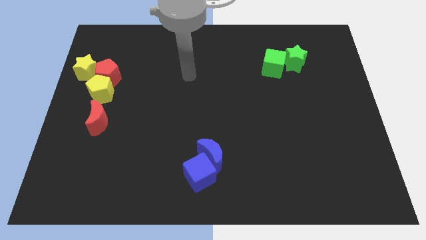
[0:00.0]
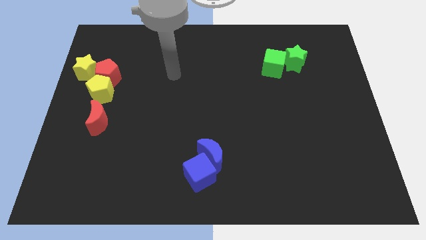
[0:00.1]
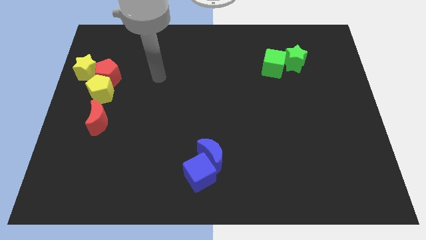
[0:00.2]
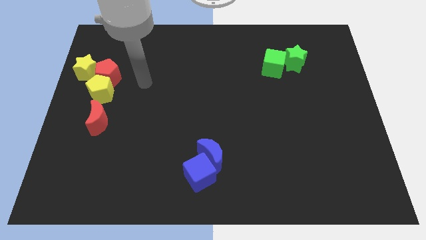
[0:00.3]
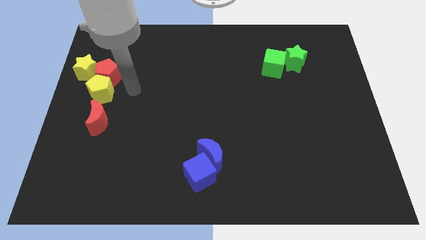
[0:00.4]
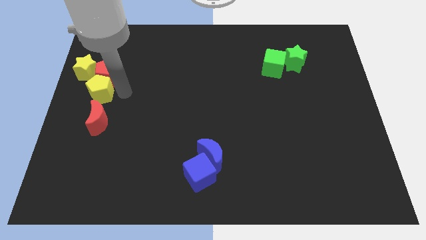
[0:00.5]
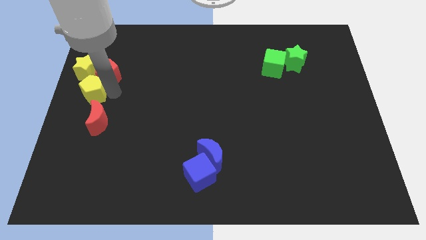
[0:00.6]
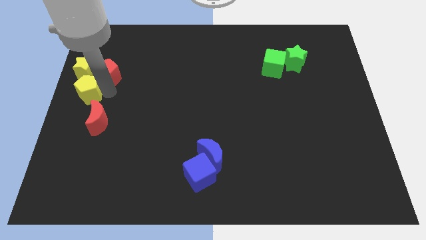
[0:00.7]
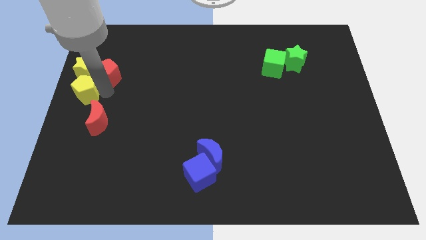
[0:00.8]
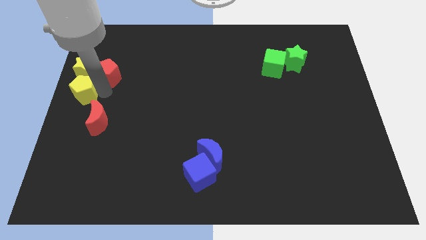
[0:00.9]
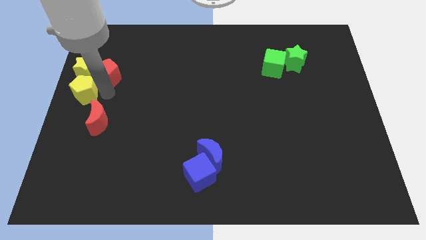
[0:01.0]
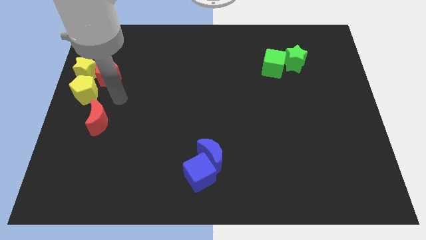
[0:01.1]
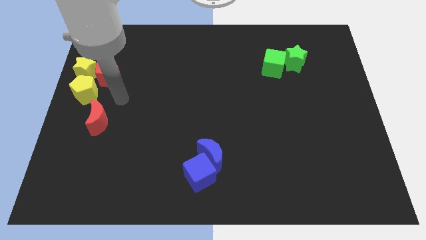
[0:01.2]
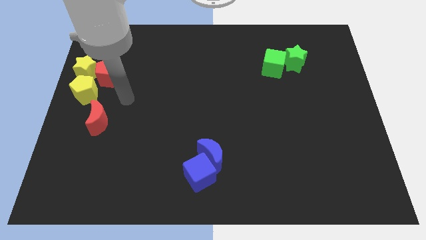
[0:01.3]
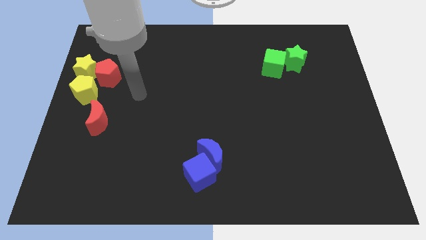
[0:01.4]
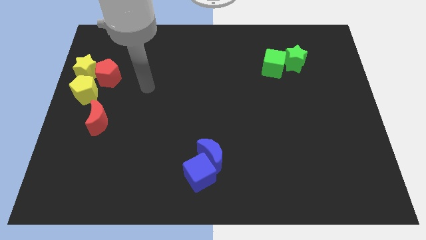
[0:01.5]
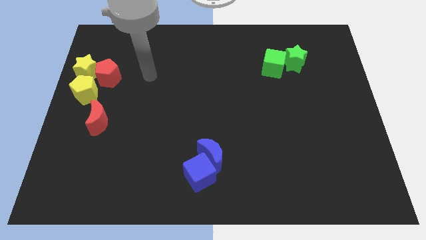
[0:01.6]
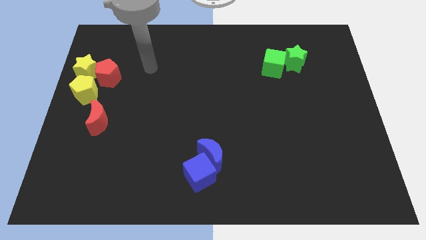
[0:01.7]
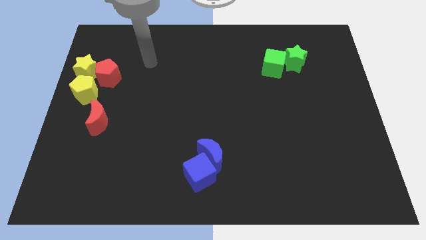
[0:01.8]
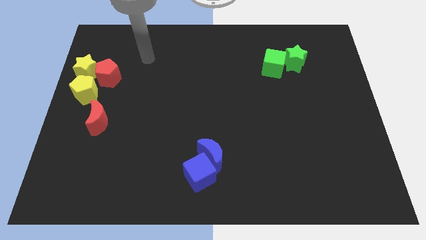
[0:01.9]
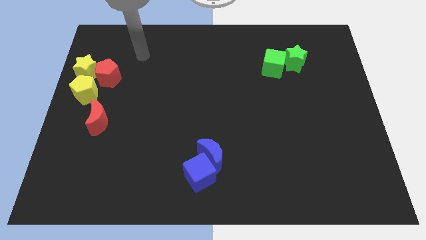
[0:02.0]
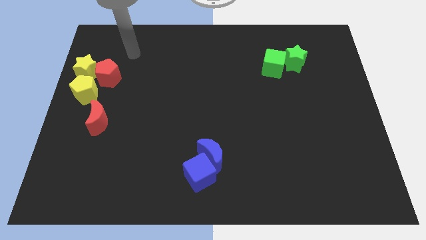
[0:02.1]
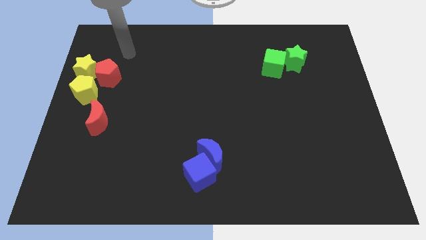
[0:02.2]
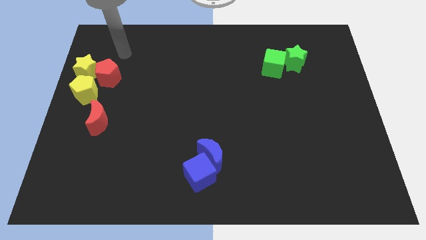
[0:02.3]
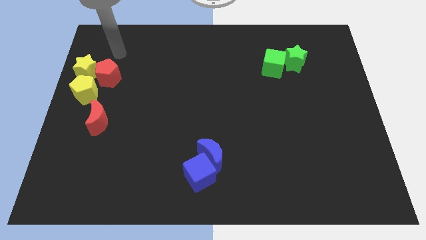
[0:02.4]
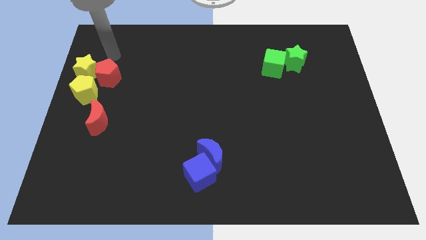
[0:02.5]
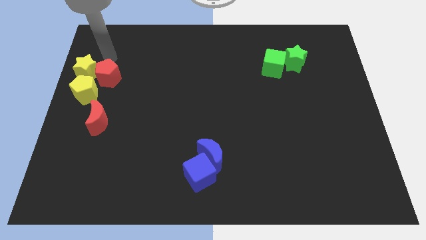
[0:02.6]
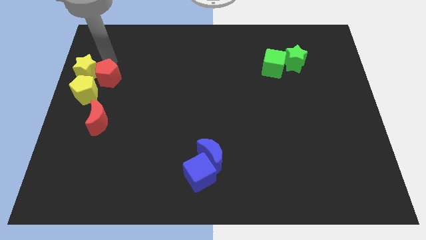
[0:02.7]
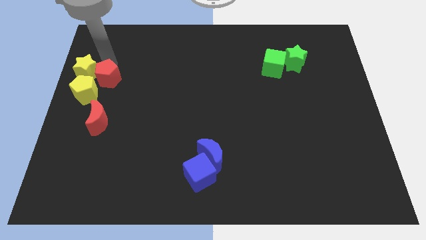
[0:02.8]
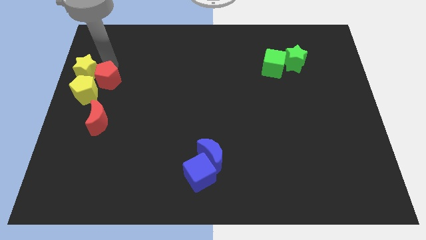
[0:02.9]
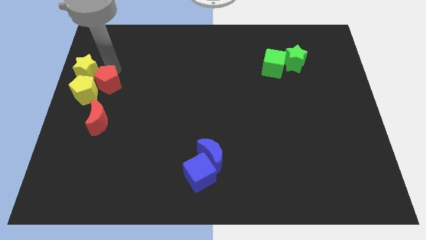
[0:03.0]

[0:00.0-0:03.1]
place the yellow pentagon down to the yellow star

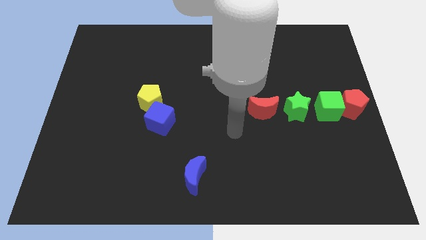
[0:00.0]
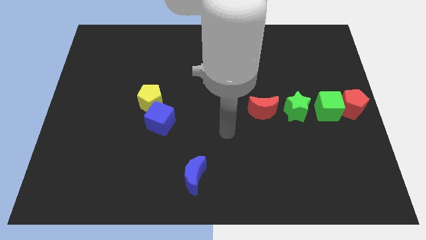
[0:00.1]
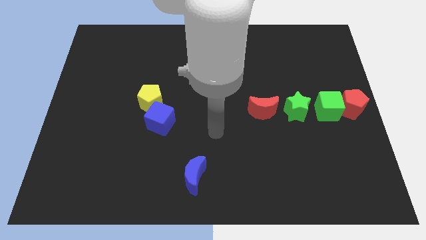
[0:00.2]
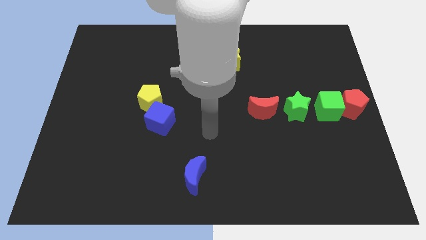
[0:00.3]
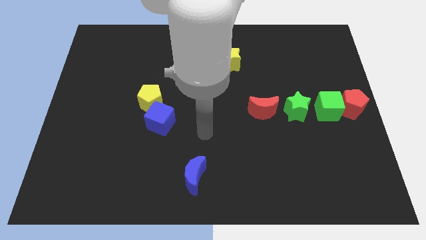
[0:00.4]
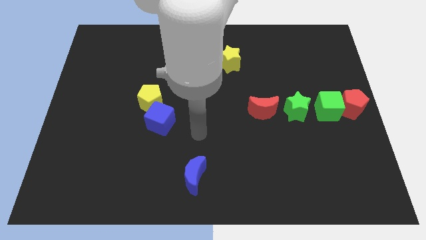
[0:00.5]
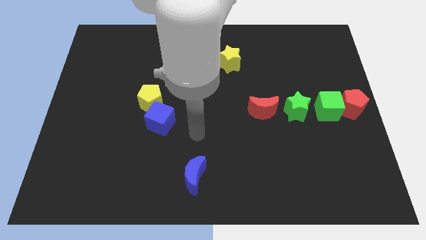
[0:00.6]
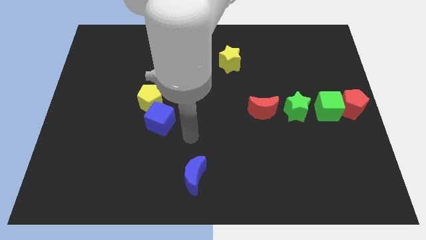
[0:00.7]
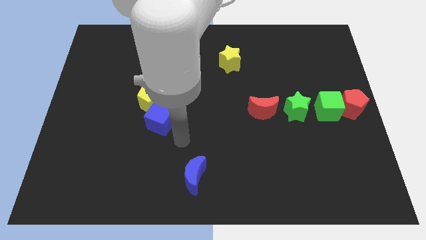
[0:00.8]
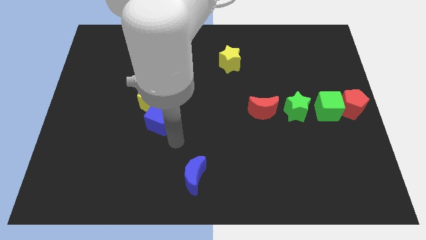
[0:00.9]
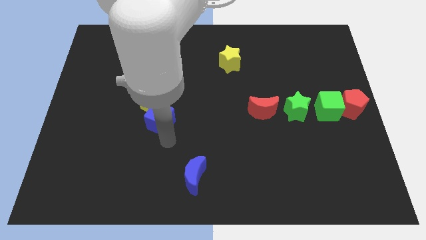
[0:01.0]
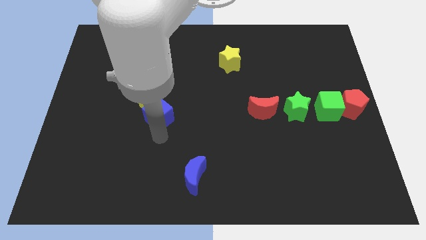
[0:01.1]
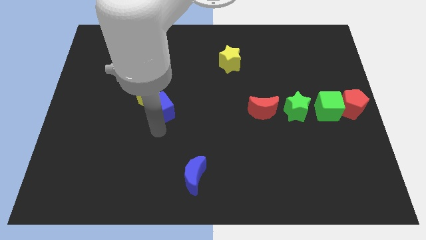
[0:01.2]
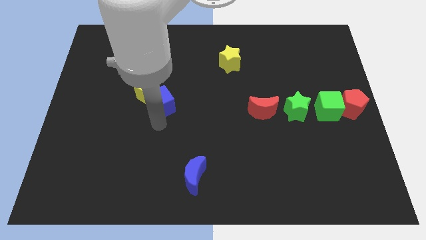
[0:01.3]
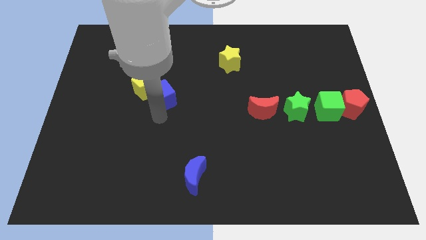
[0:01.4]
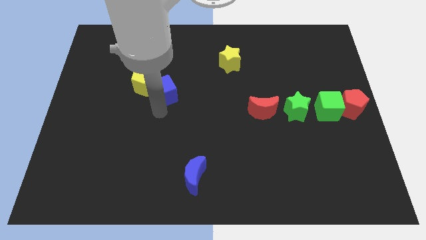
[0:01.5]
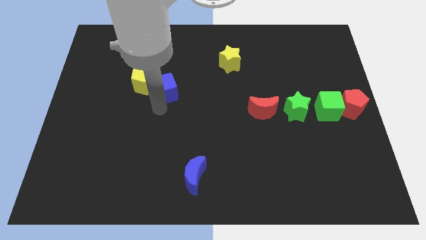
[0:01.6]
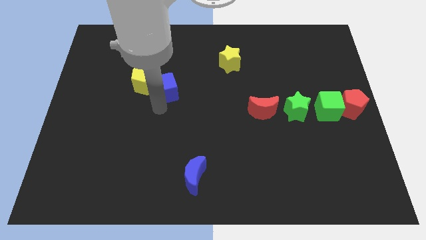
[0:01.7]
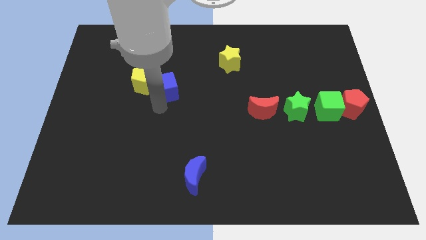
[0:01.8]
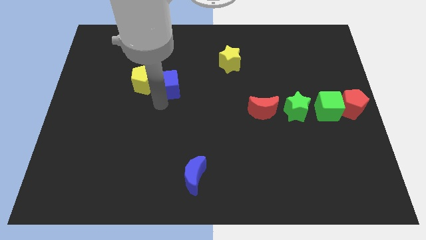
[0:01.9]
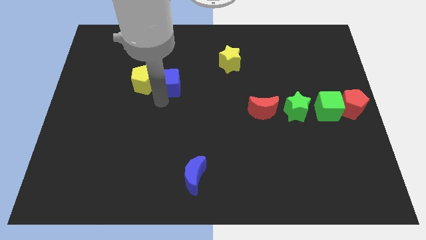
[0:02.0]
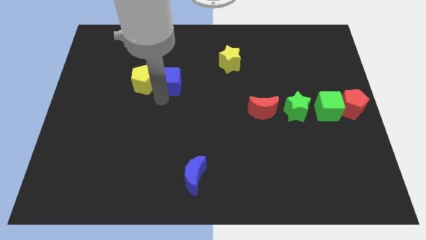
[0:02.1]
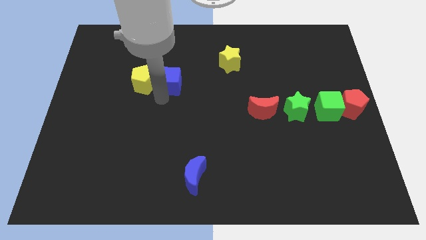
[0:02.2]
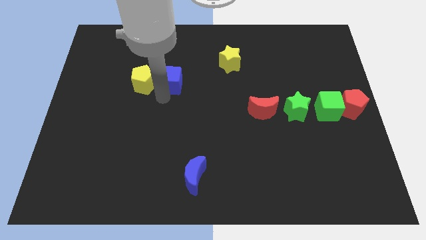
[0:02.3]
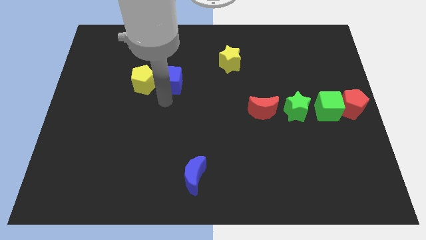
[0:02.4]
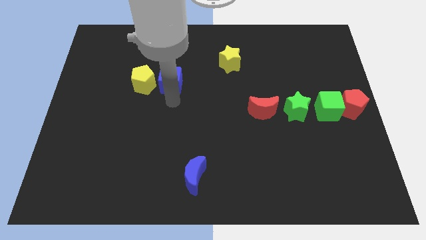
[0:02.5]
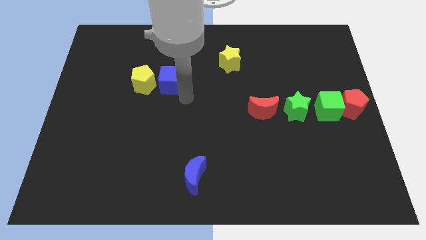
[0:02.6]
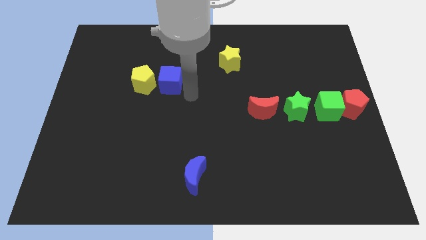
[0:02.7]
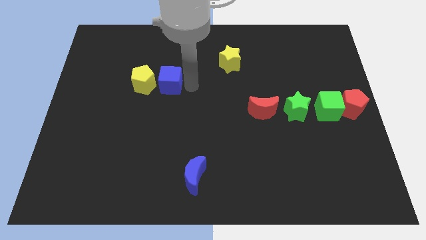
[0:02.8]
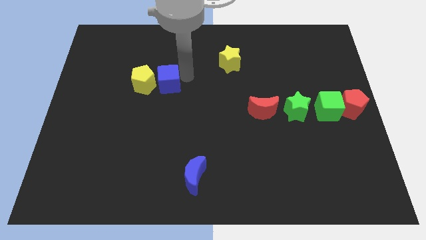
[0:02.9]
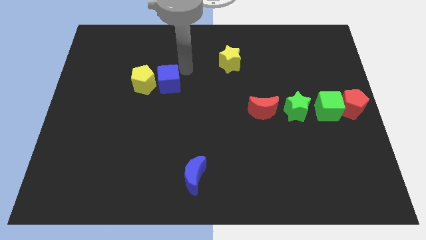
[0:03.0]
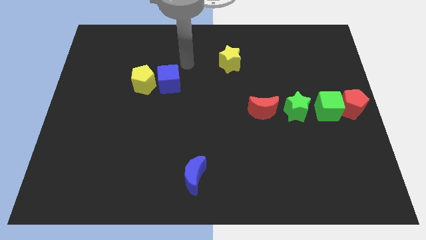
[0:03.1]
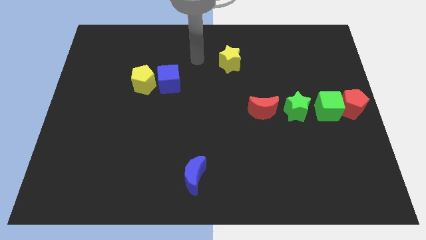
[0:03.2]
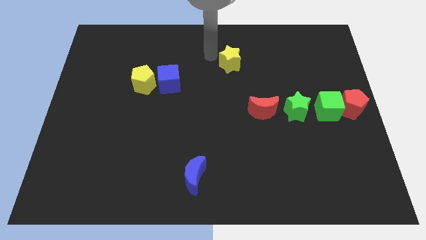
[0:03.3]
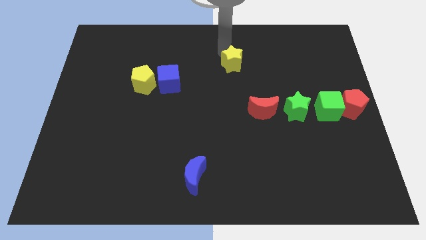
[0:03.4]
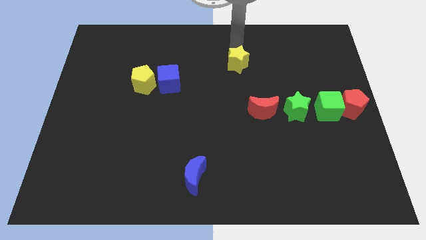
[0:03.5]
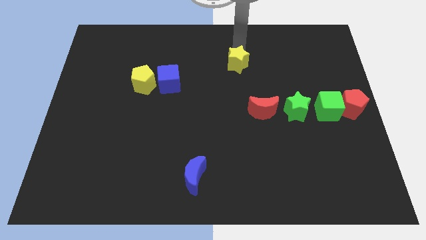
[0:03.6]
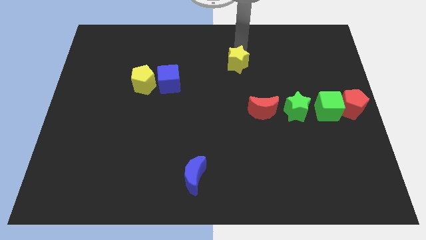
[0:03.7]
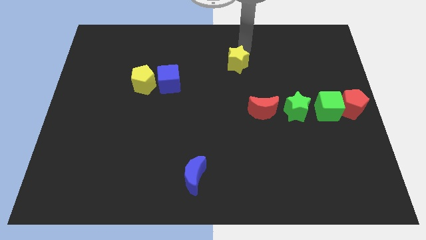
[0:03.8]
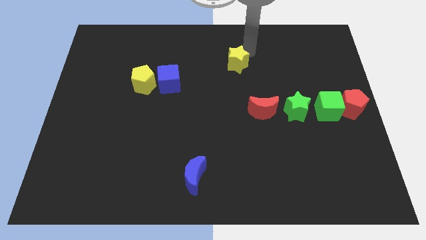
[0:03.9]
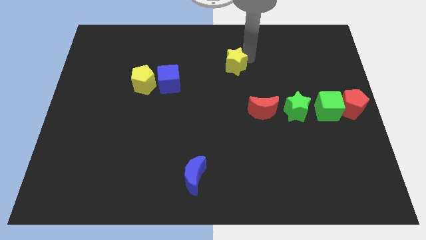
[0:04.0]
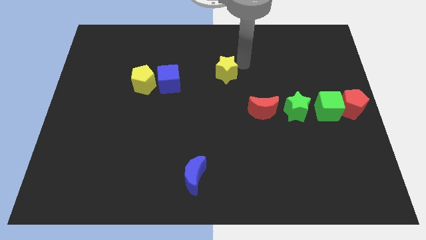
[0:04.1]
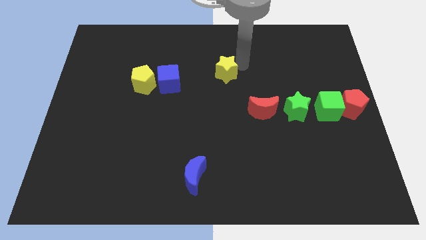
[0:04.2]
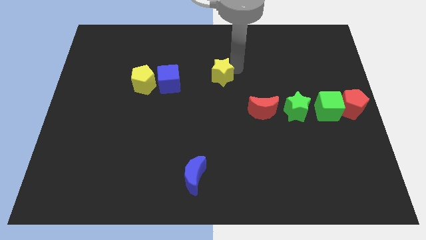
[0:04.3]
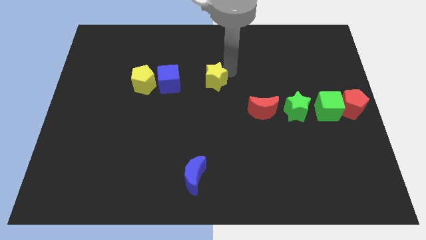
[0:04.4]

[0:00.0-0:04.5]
place the yellow star diagonal to the red moon

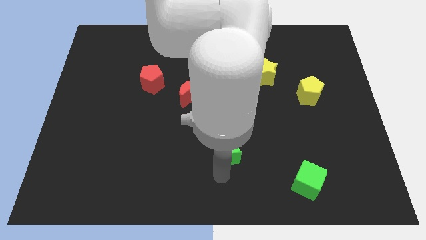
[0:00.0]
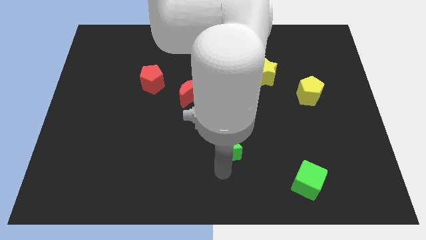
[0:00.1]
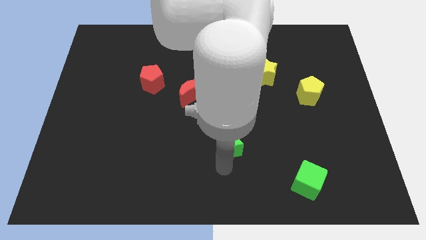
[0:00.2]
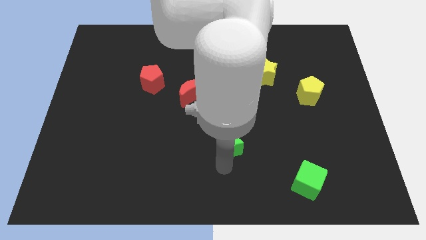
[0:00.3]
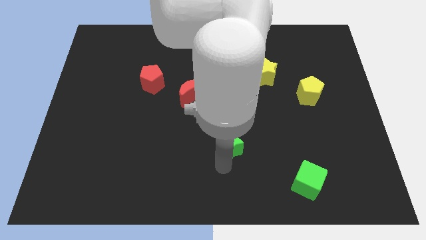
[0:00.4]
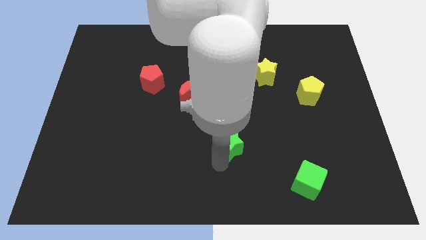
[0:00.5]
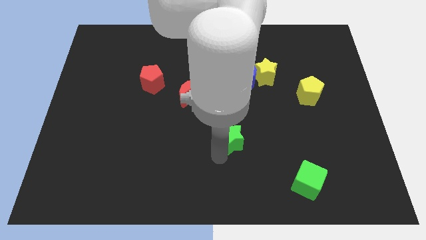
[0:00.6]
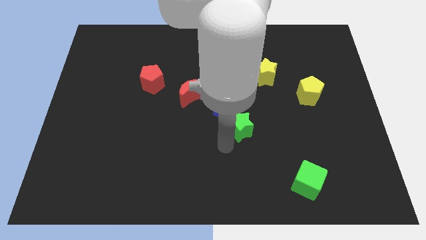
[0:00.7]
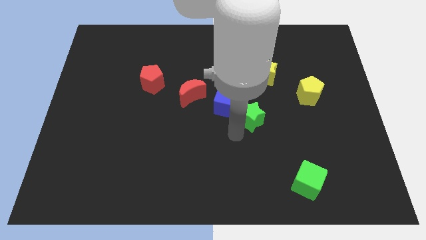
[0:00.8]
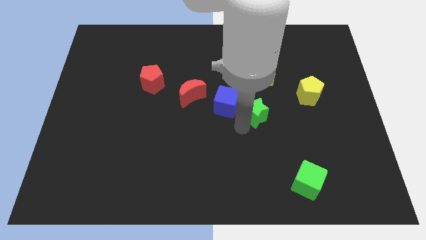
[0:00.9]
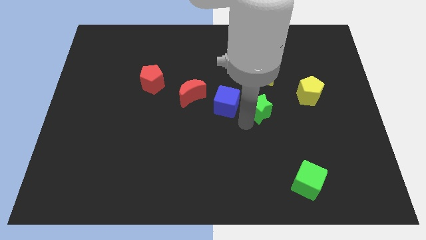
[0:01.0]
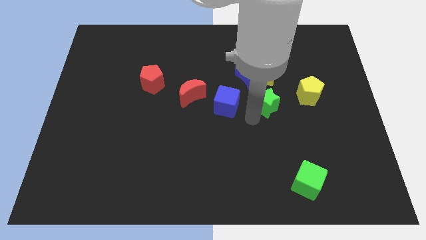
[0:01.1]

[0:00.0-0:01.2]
place the green star to the right of the blue cube

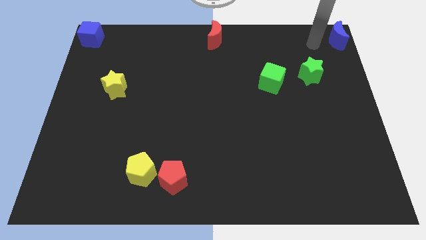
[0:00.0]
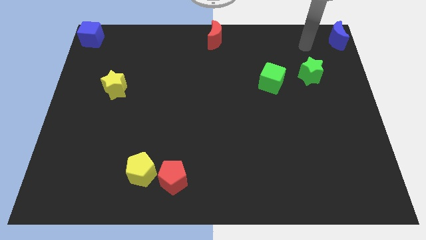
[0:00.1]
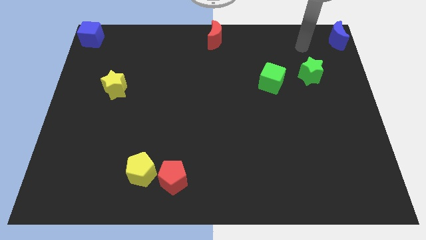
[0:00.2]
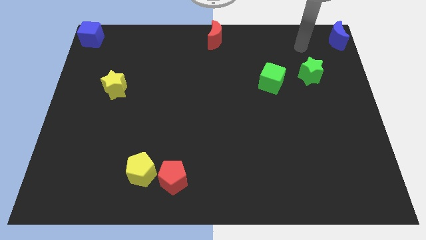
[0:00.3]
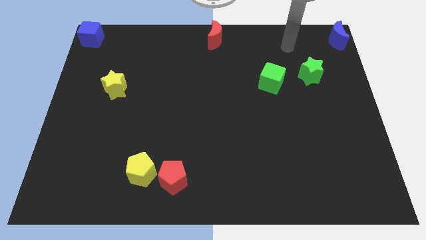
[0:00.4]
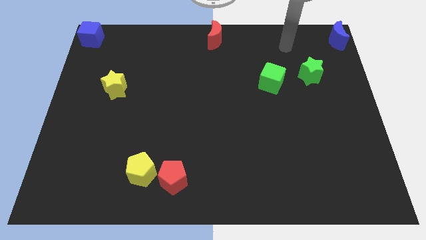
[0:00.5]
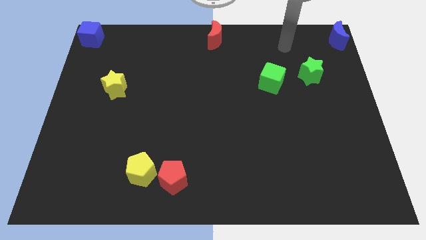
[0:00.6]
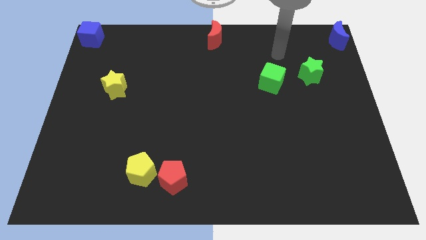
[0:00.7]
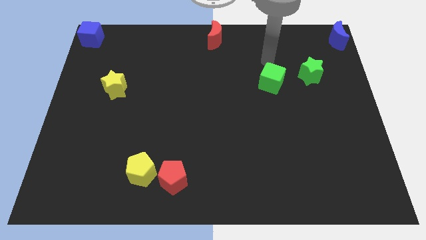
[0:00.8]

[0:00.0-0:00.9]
move your arm away from blue crescent
